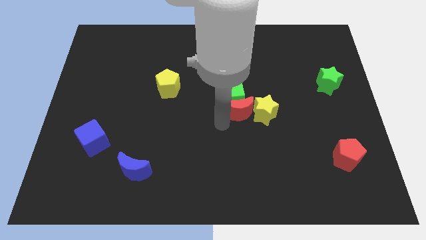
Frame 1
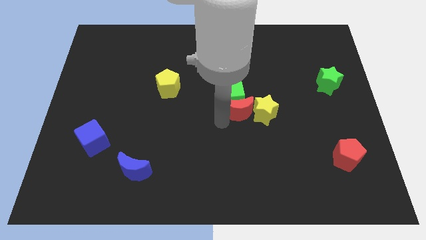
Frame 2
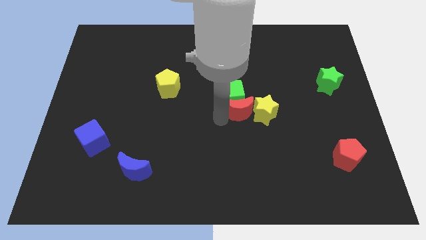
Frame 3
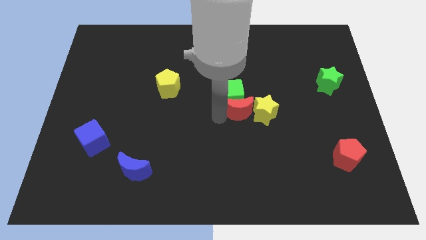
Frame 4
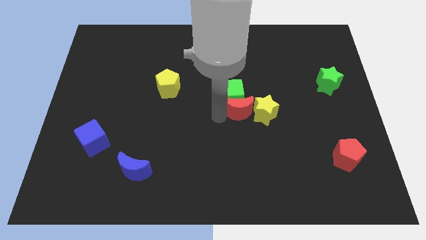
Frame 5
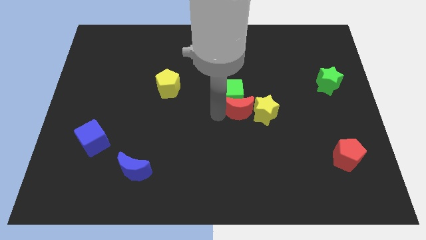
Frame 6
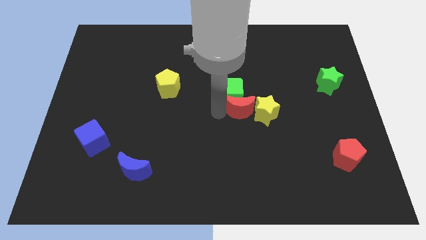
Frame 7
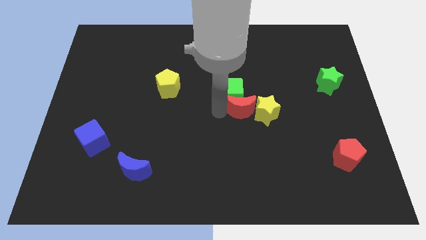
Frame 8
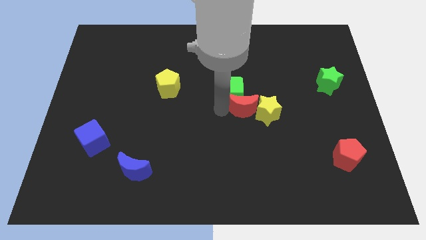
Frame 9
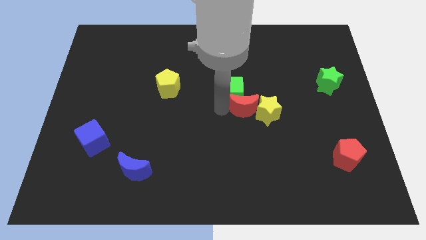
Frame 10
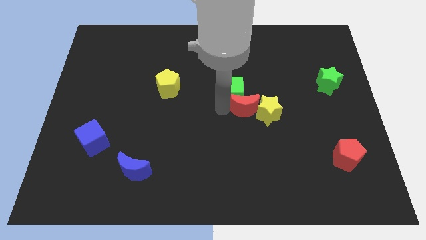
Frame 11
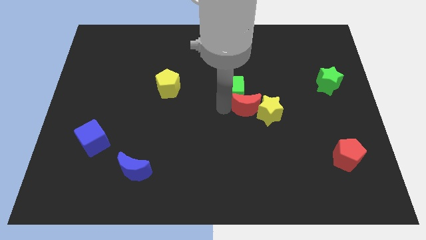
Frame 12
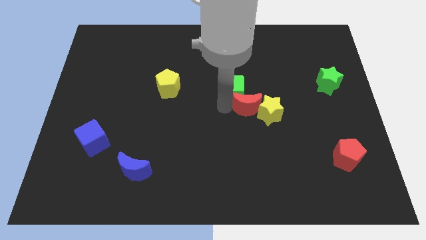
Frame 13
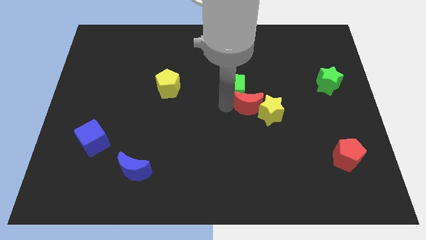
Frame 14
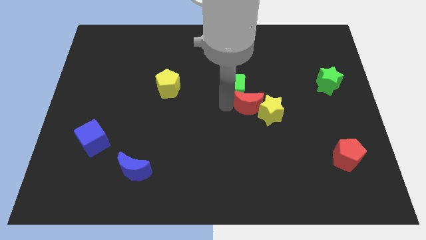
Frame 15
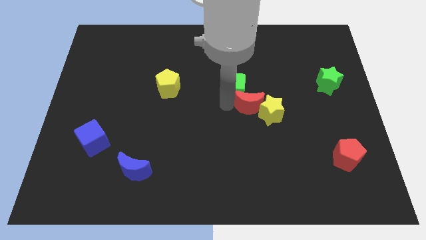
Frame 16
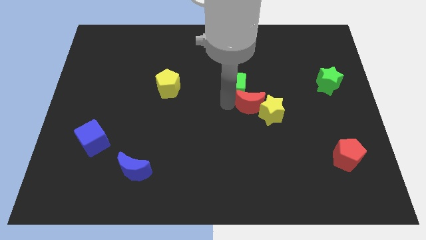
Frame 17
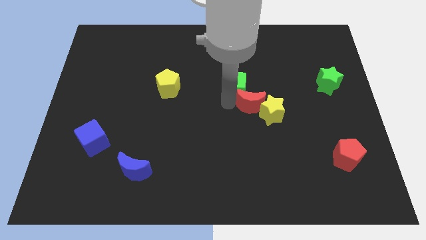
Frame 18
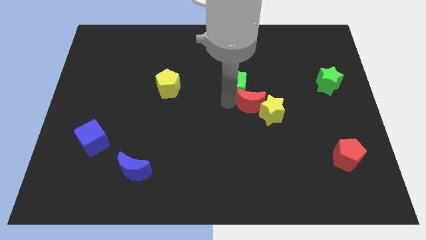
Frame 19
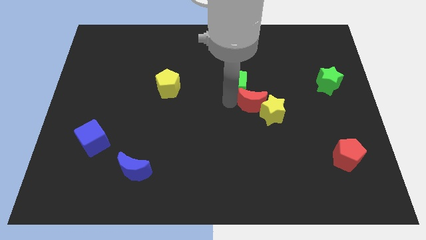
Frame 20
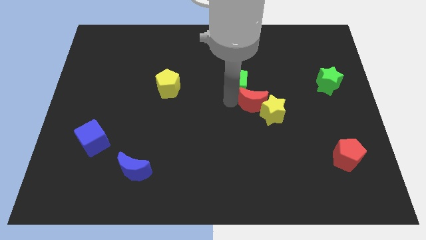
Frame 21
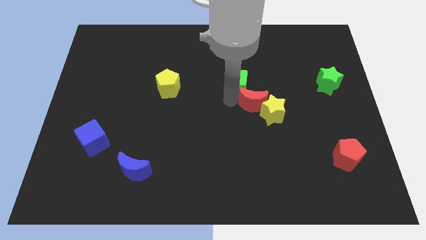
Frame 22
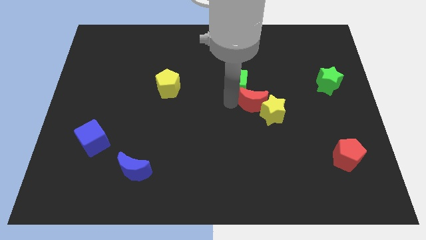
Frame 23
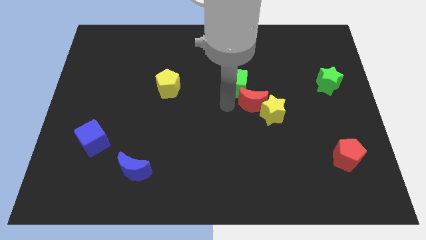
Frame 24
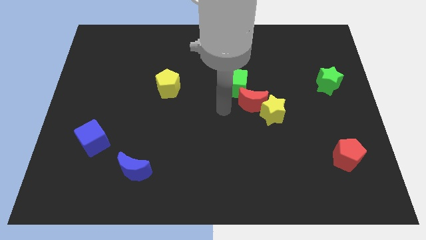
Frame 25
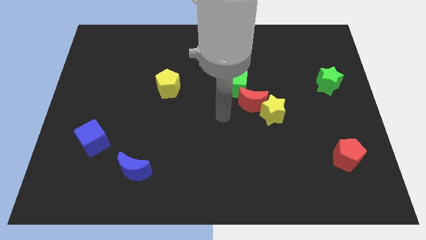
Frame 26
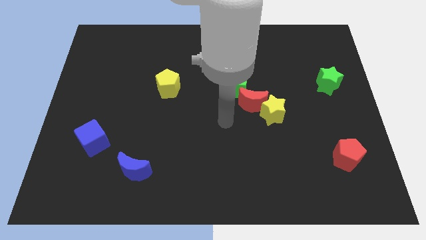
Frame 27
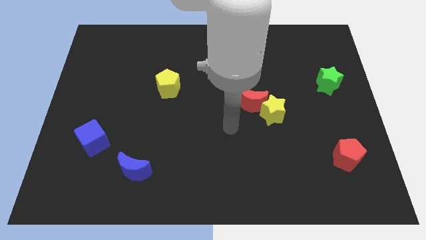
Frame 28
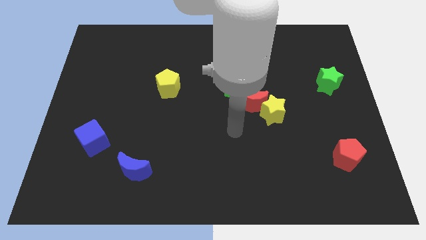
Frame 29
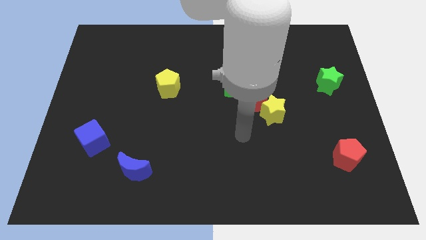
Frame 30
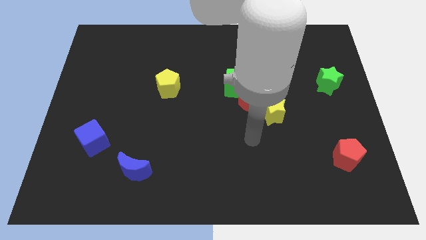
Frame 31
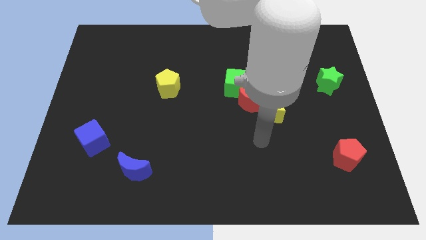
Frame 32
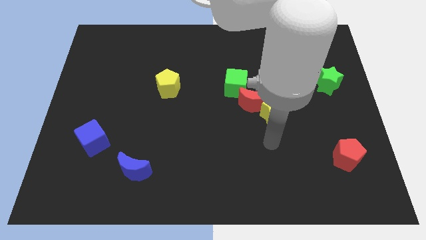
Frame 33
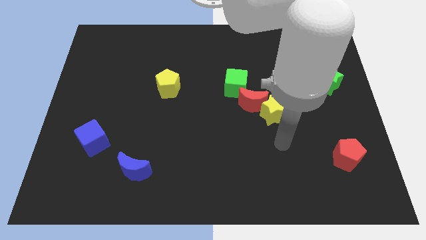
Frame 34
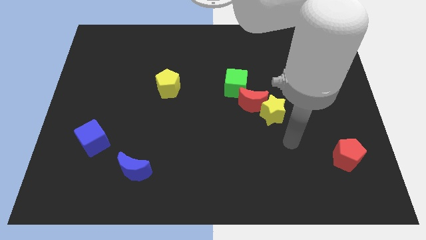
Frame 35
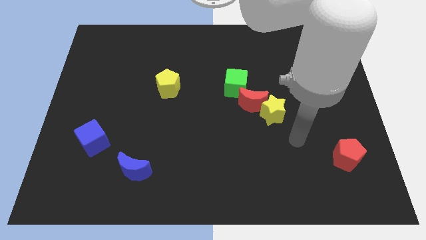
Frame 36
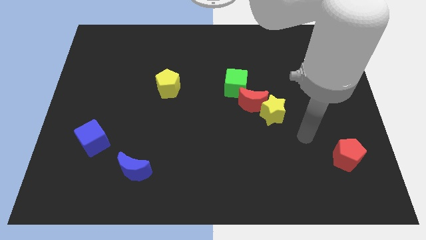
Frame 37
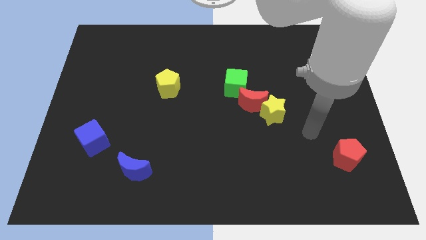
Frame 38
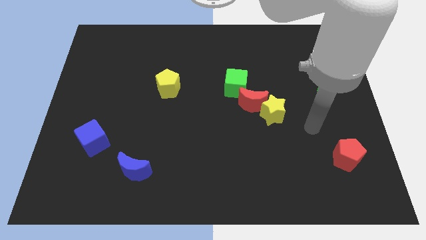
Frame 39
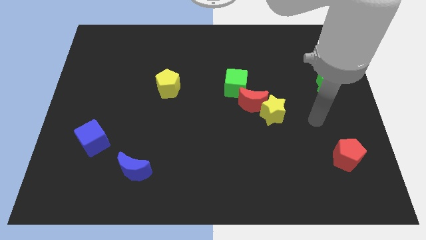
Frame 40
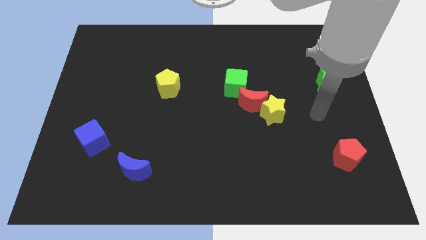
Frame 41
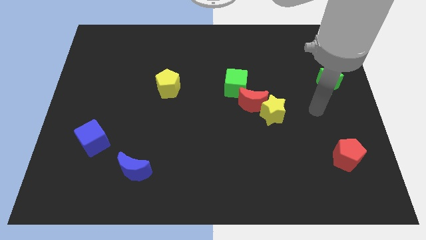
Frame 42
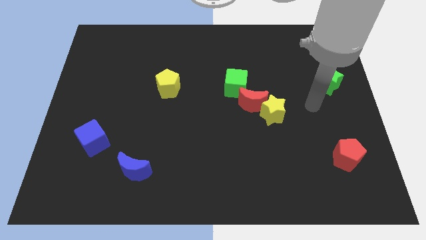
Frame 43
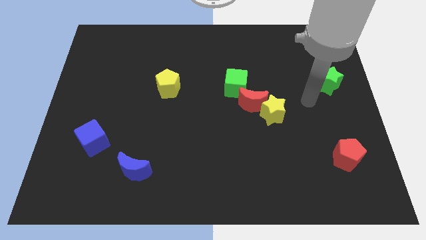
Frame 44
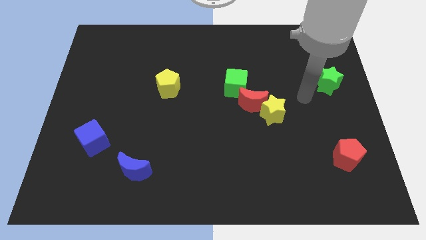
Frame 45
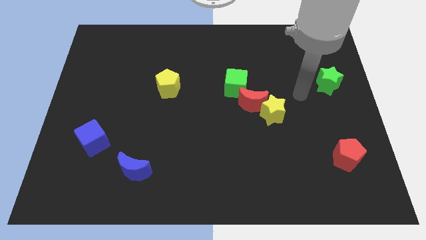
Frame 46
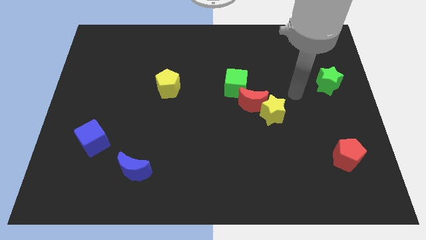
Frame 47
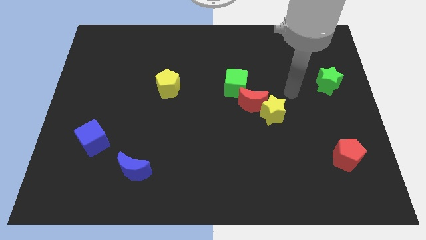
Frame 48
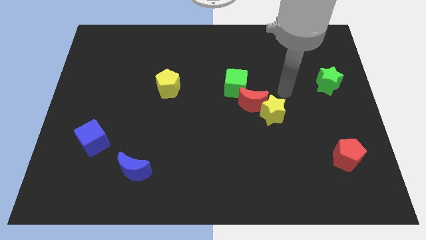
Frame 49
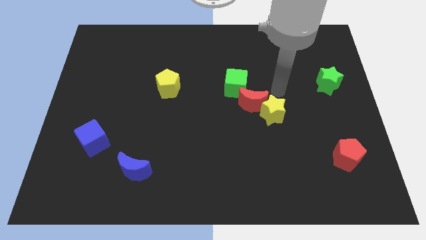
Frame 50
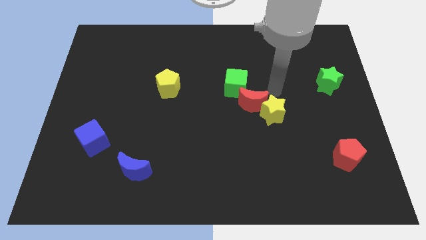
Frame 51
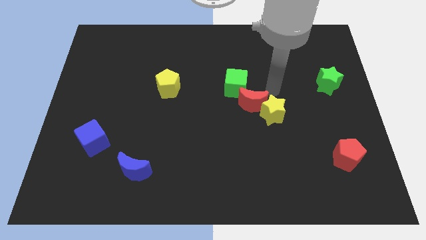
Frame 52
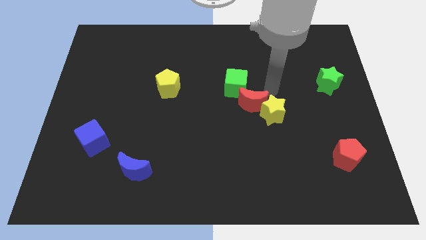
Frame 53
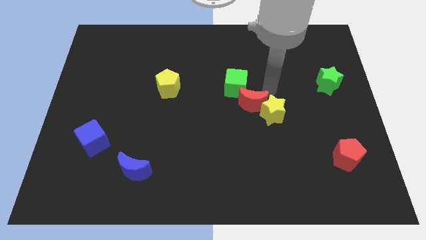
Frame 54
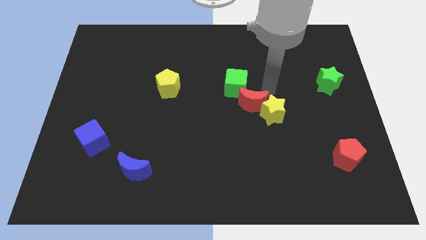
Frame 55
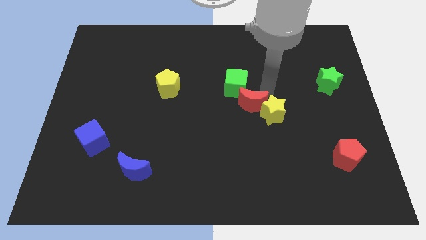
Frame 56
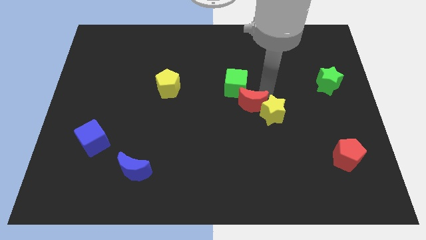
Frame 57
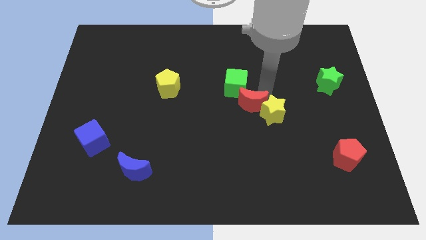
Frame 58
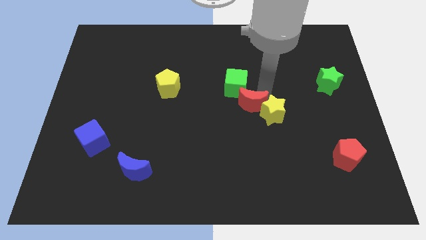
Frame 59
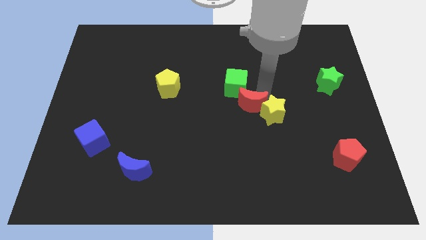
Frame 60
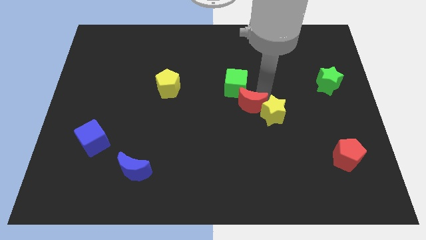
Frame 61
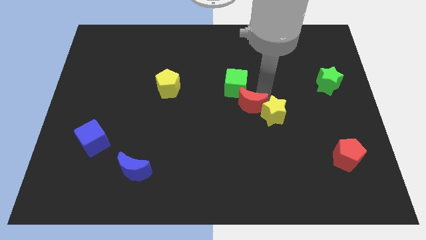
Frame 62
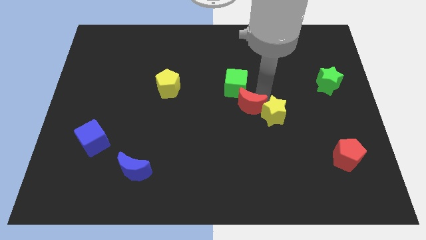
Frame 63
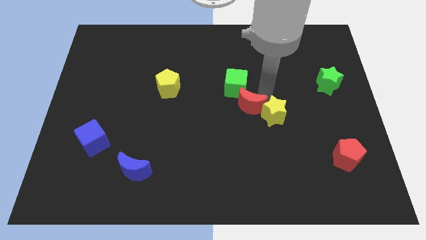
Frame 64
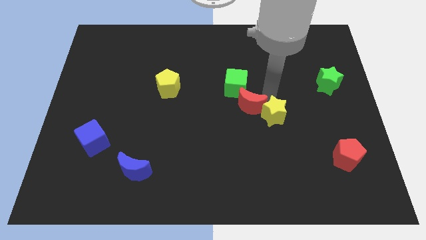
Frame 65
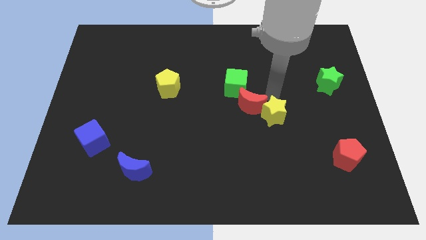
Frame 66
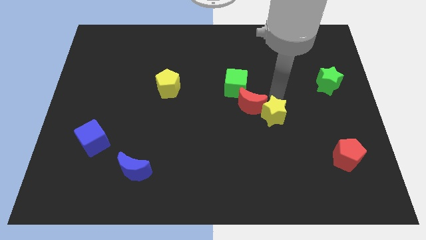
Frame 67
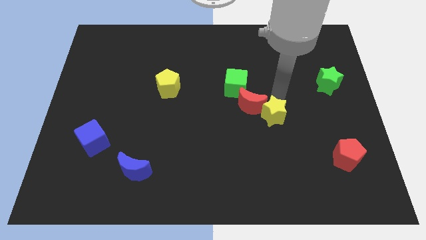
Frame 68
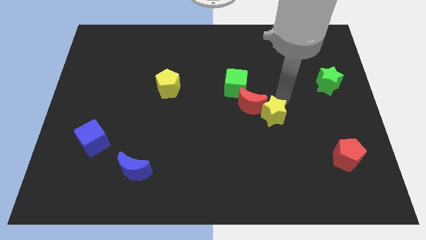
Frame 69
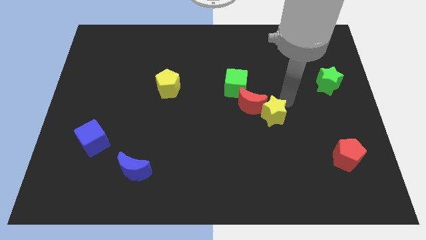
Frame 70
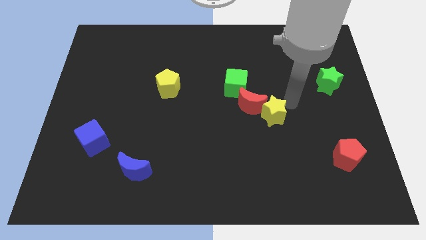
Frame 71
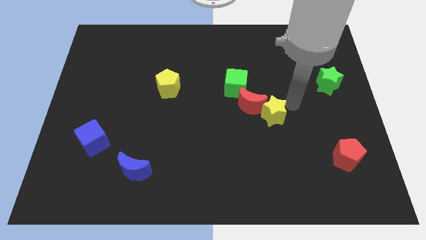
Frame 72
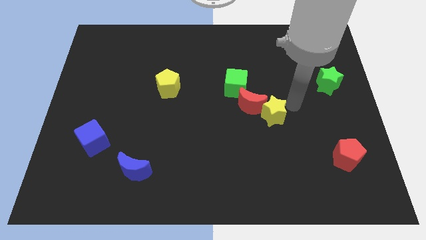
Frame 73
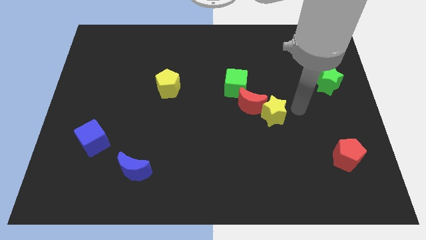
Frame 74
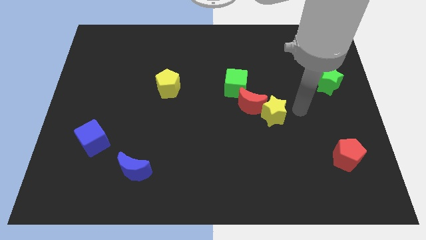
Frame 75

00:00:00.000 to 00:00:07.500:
place your hand diagonally in between the green star and yellow star

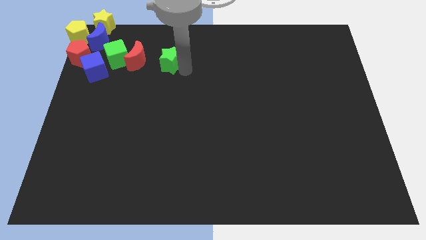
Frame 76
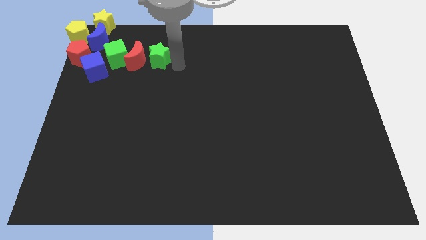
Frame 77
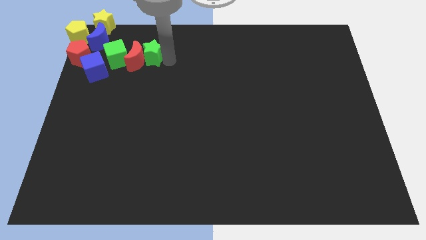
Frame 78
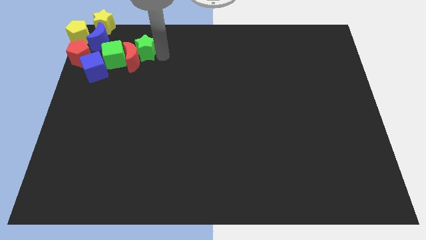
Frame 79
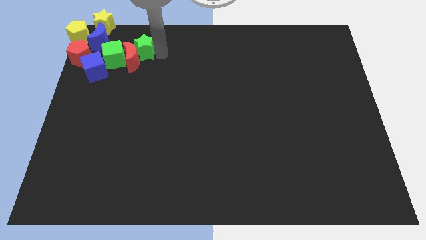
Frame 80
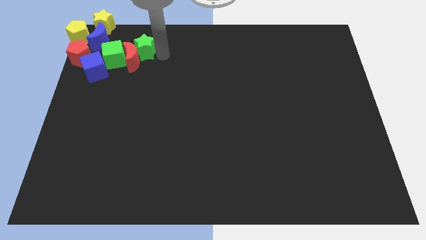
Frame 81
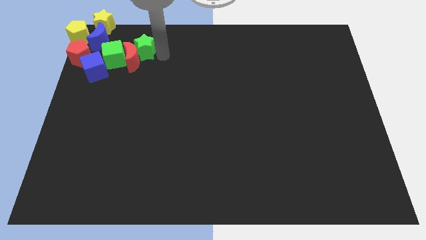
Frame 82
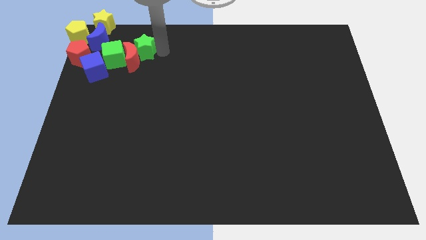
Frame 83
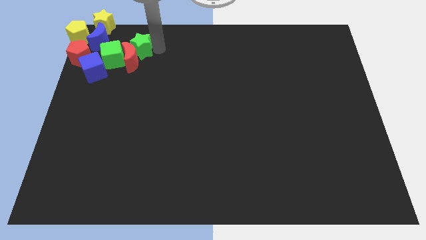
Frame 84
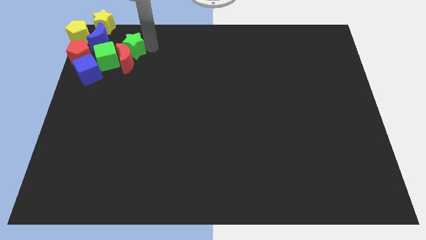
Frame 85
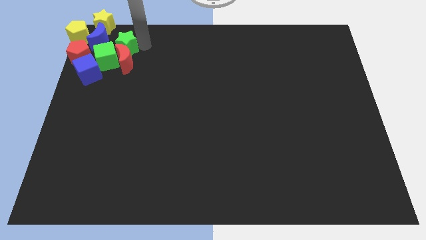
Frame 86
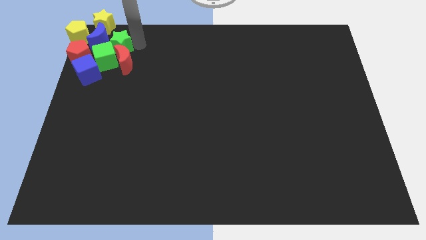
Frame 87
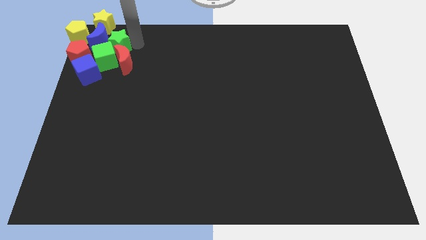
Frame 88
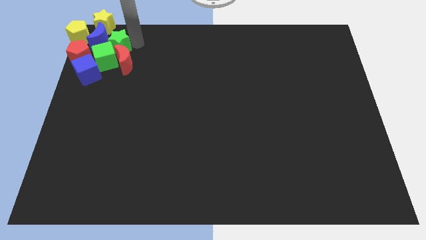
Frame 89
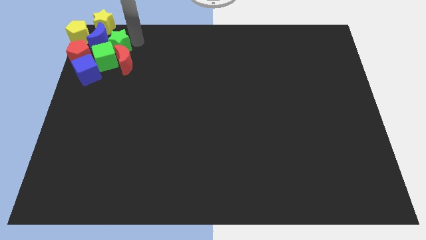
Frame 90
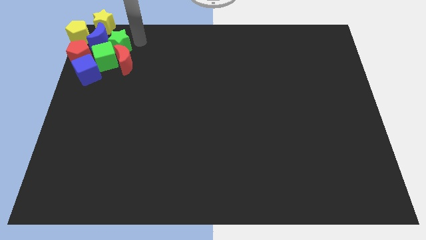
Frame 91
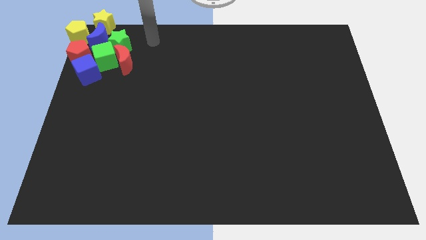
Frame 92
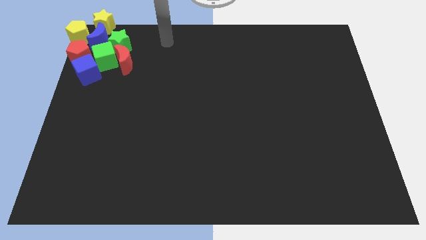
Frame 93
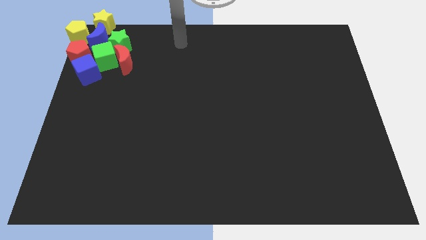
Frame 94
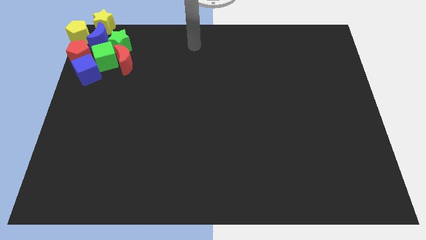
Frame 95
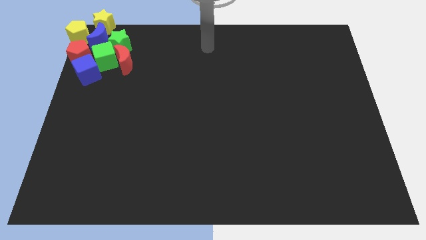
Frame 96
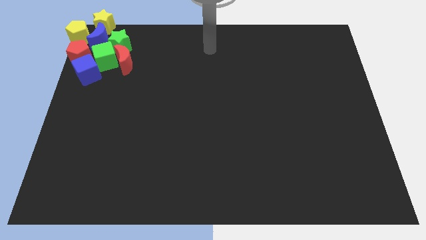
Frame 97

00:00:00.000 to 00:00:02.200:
add green star into the group of blocks in the top left
